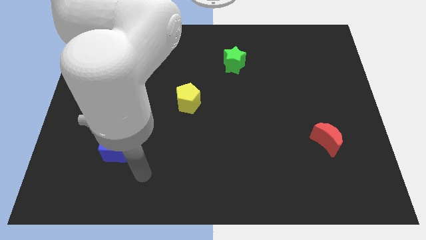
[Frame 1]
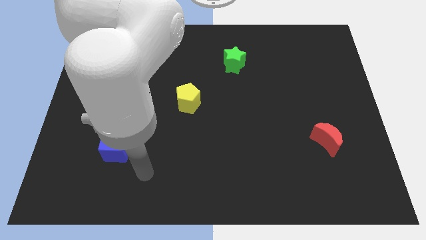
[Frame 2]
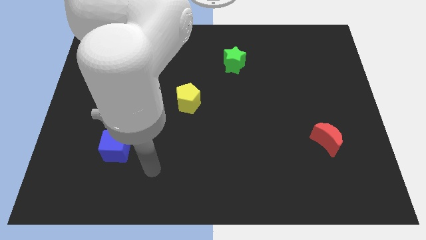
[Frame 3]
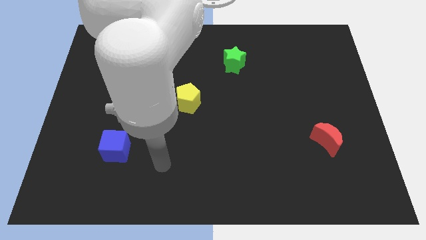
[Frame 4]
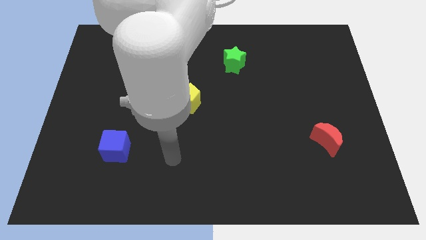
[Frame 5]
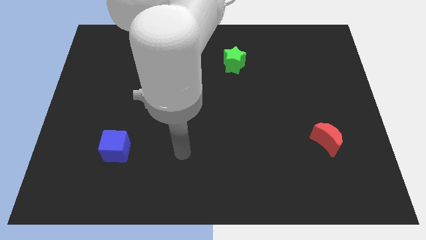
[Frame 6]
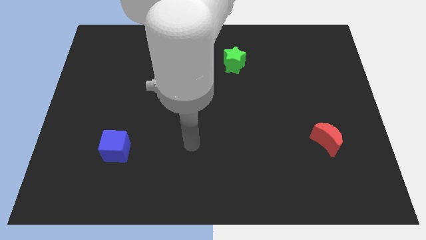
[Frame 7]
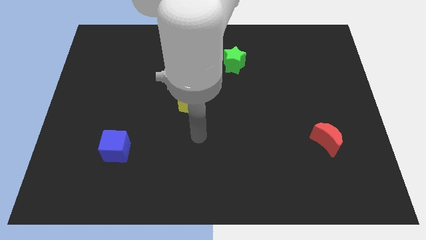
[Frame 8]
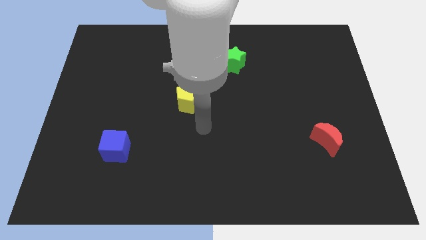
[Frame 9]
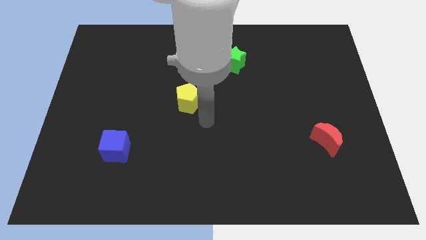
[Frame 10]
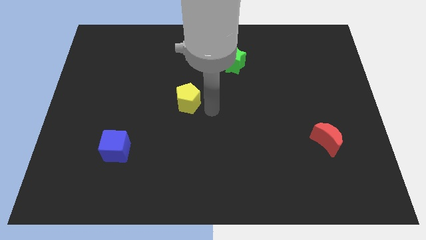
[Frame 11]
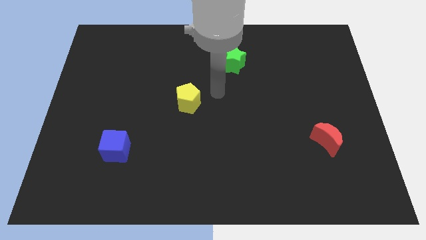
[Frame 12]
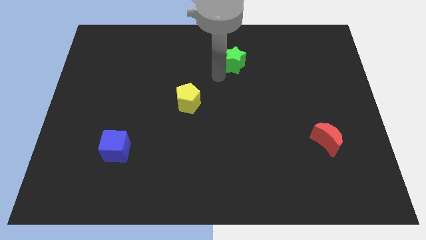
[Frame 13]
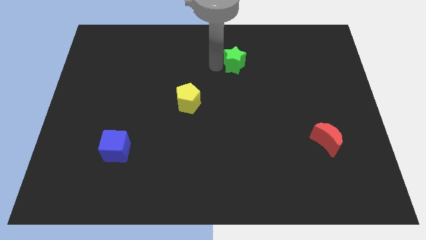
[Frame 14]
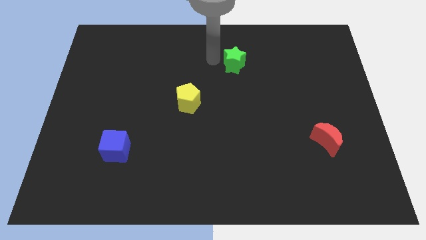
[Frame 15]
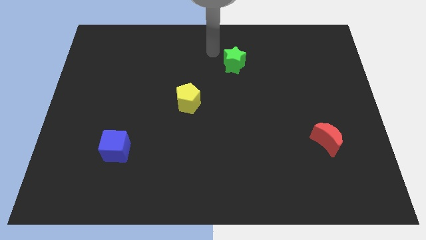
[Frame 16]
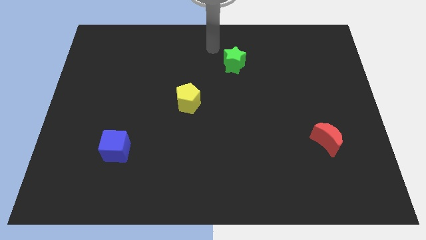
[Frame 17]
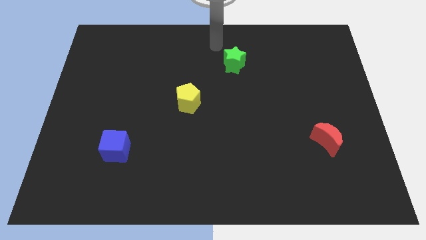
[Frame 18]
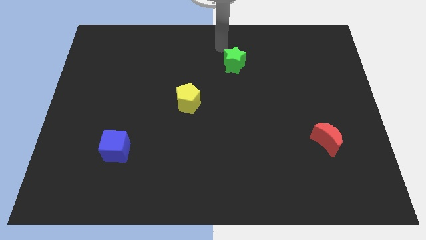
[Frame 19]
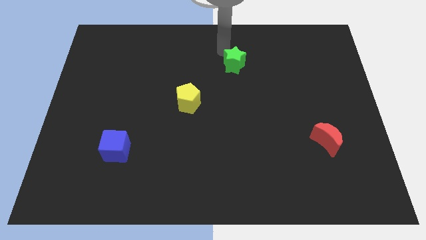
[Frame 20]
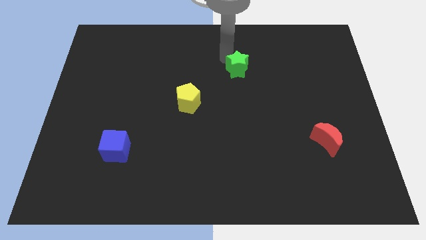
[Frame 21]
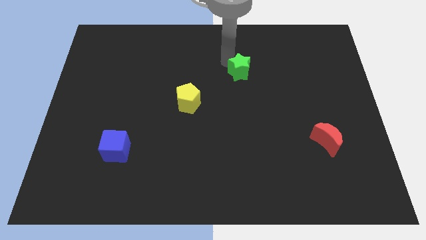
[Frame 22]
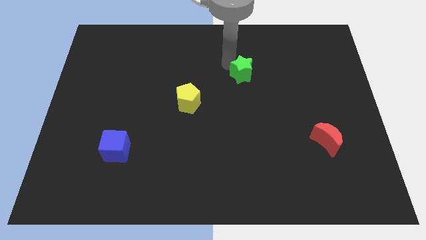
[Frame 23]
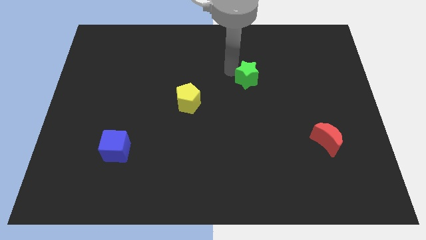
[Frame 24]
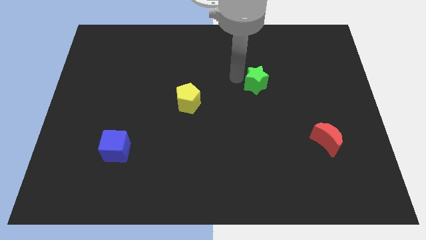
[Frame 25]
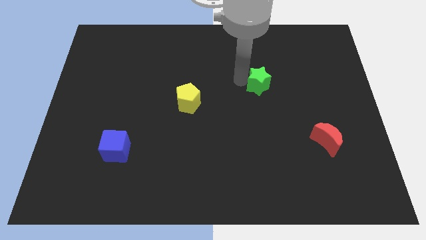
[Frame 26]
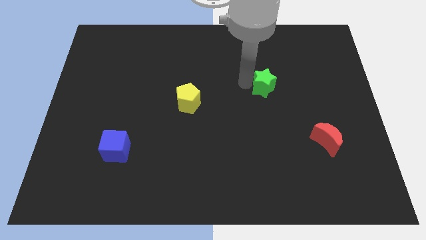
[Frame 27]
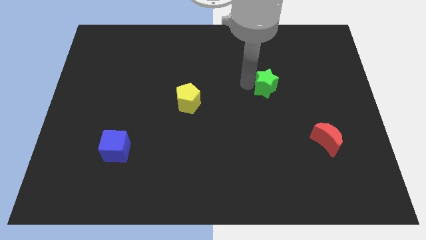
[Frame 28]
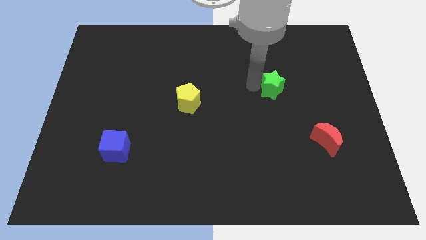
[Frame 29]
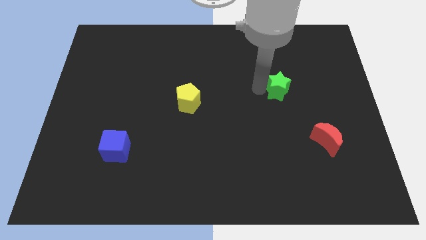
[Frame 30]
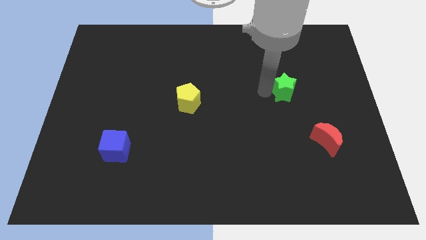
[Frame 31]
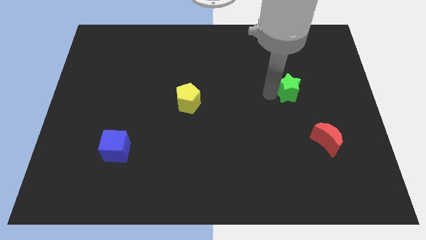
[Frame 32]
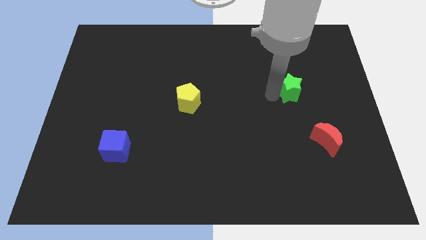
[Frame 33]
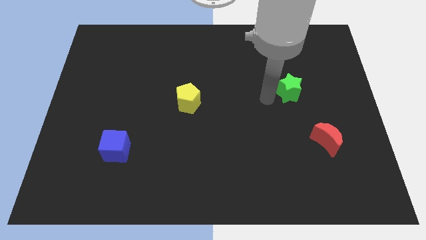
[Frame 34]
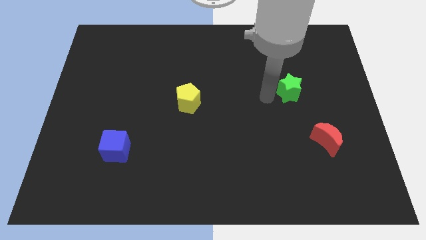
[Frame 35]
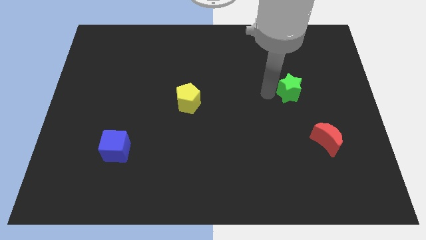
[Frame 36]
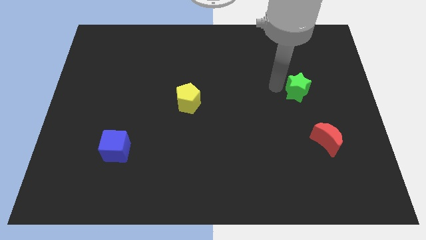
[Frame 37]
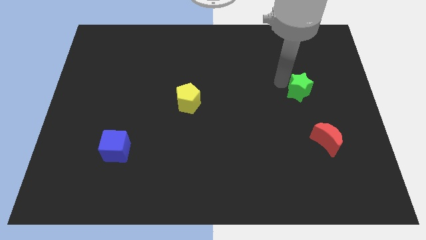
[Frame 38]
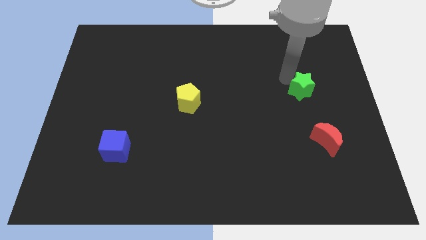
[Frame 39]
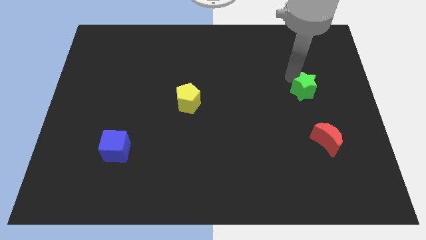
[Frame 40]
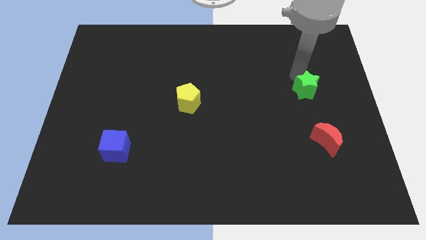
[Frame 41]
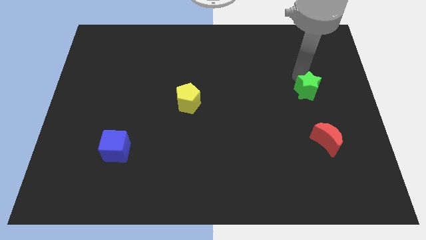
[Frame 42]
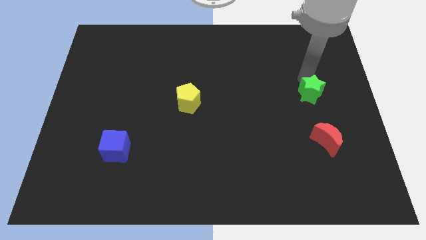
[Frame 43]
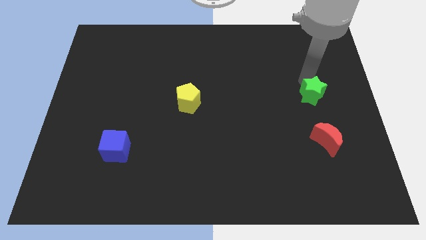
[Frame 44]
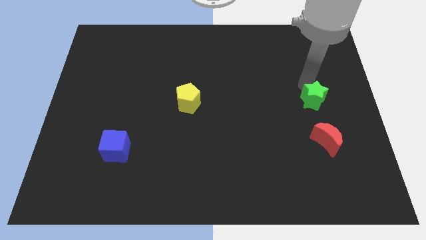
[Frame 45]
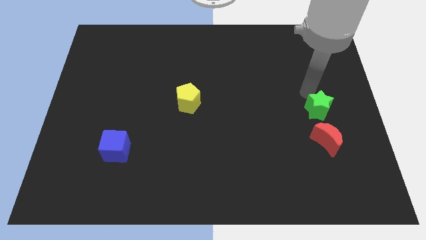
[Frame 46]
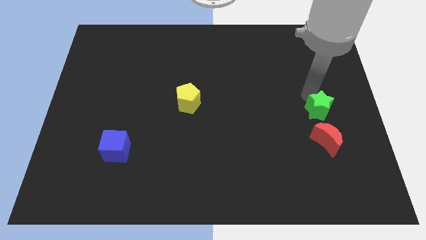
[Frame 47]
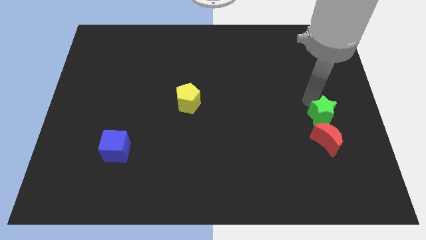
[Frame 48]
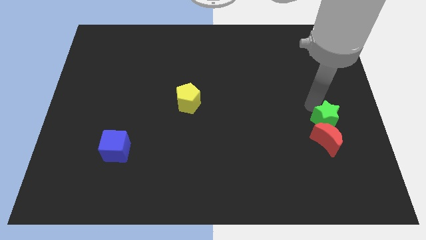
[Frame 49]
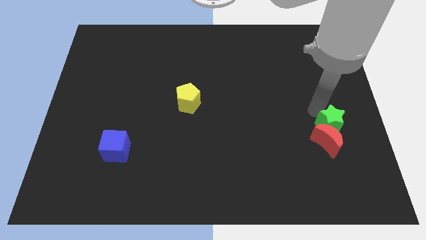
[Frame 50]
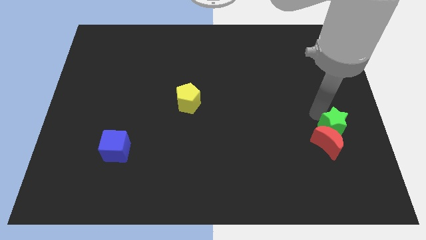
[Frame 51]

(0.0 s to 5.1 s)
move the green star to the red moon

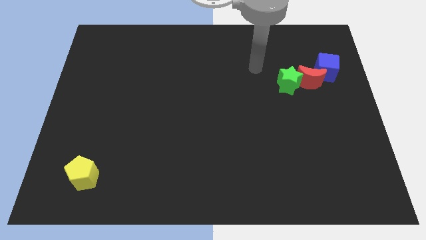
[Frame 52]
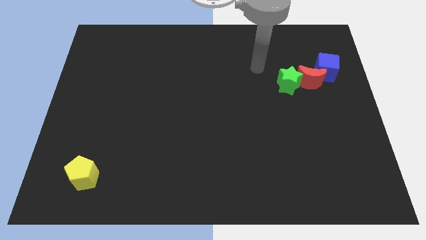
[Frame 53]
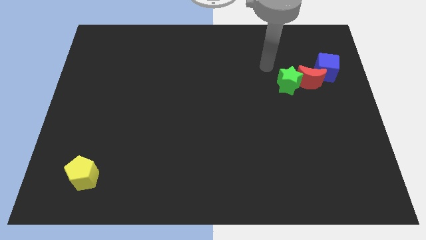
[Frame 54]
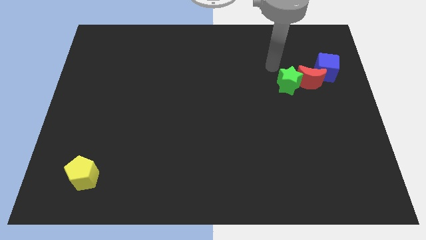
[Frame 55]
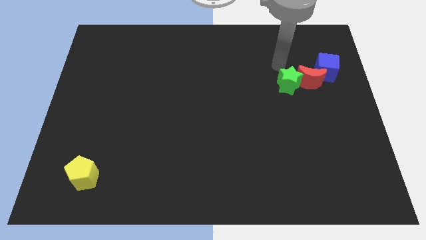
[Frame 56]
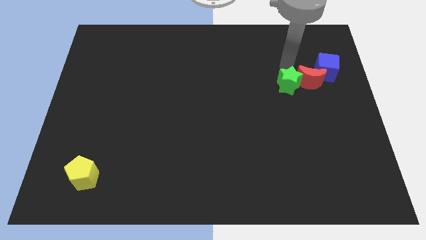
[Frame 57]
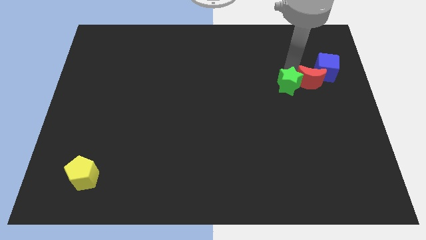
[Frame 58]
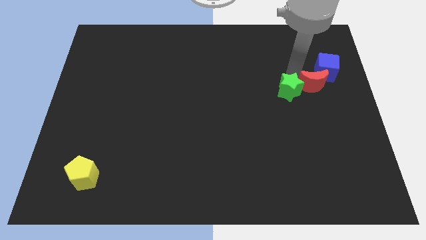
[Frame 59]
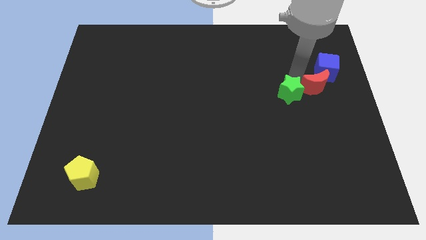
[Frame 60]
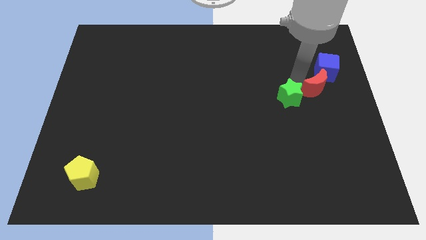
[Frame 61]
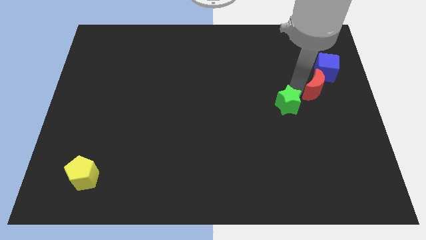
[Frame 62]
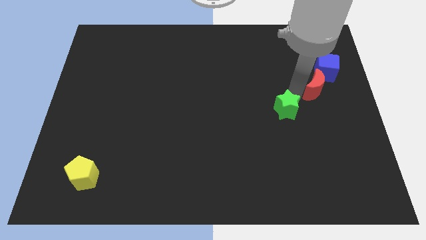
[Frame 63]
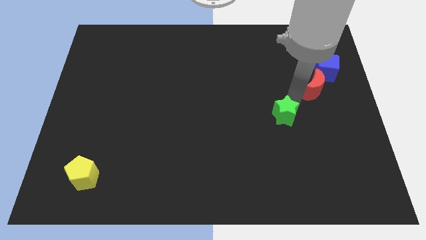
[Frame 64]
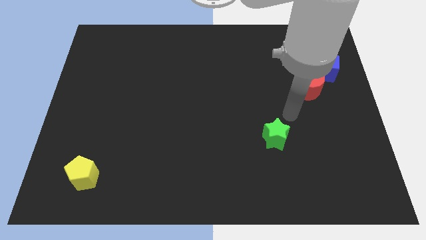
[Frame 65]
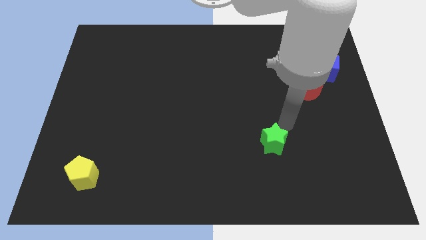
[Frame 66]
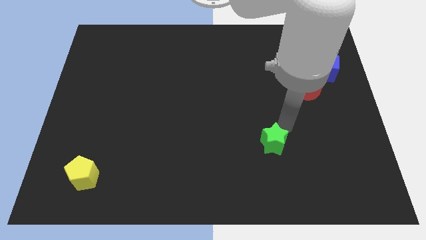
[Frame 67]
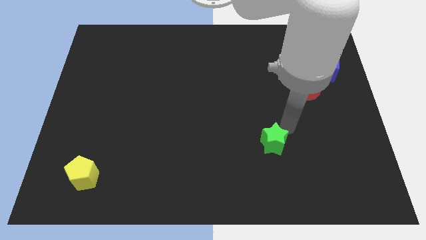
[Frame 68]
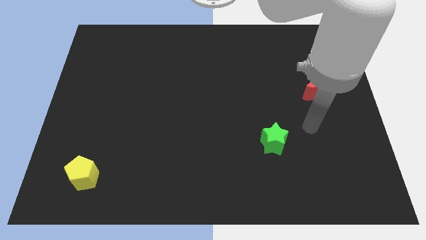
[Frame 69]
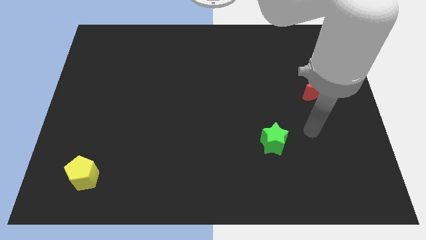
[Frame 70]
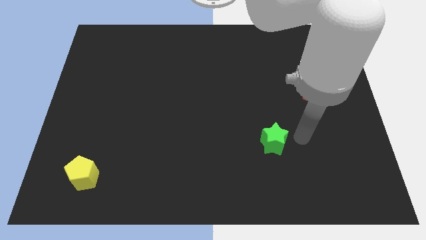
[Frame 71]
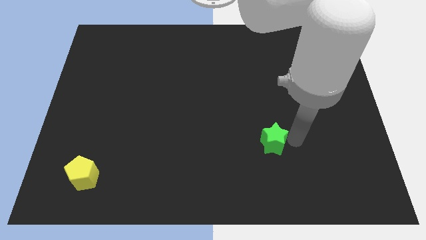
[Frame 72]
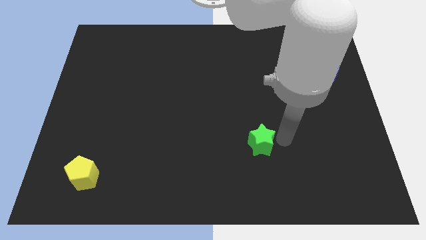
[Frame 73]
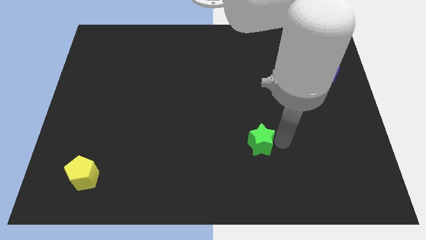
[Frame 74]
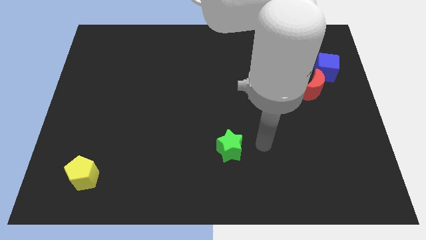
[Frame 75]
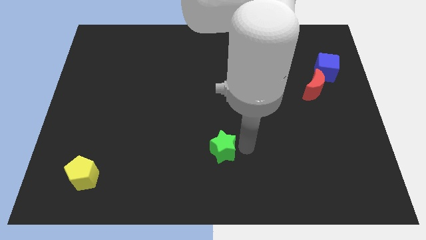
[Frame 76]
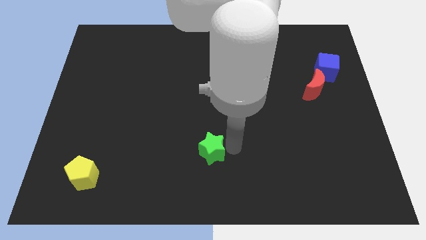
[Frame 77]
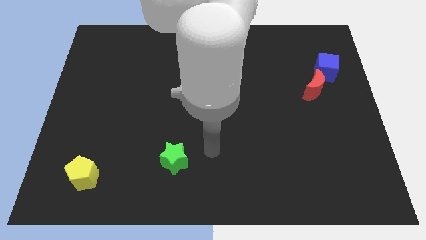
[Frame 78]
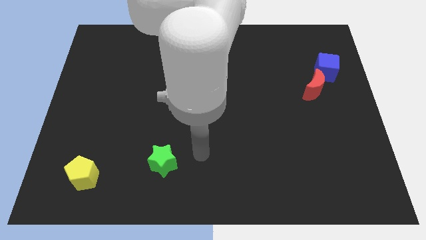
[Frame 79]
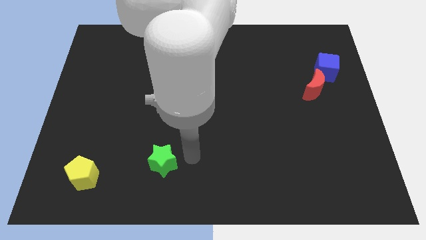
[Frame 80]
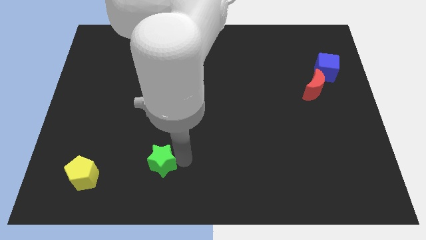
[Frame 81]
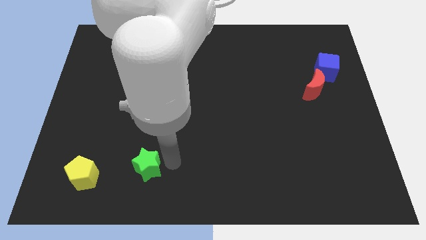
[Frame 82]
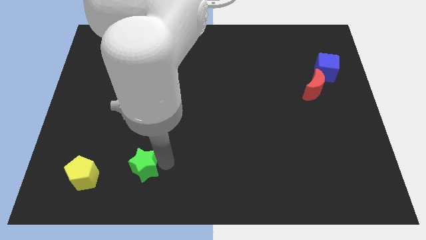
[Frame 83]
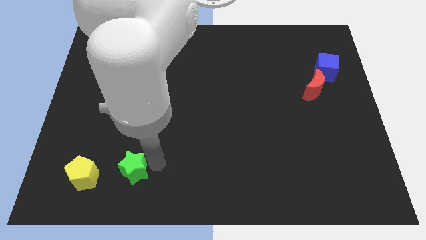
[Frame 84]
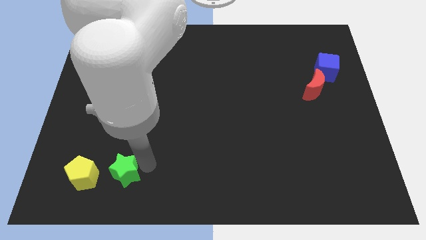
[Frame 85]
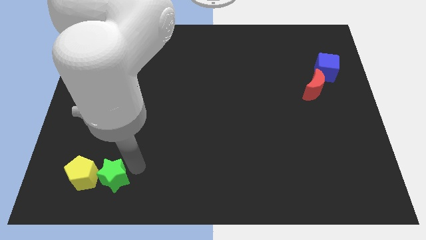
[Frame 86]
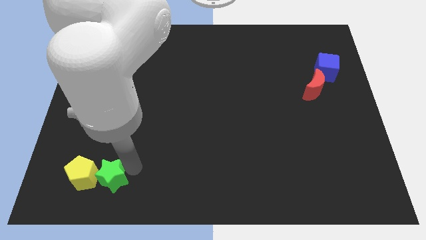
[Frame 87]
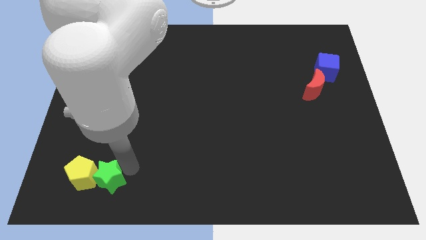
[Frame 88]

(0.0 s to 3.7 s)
put the green block towards the yellow pentagon
